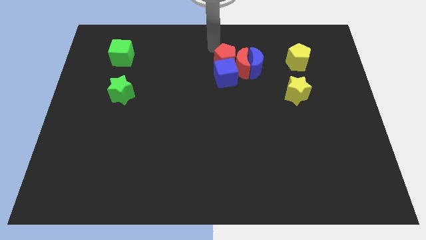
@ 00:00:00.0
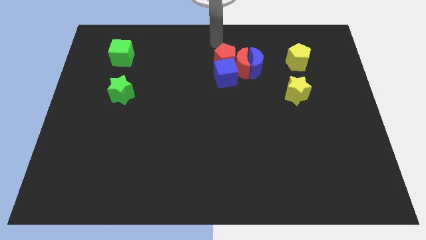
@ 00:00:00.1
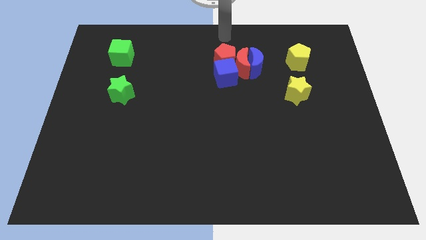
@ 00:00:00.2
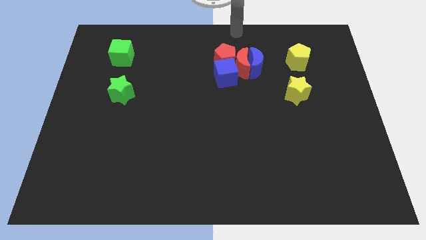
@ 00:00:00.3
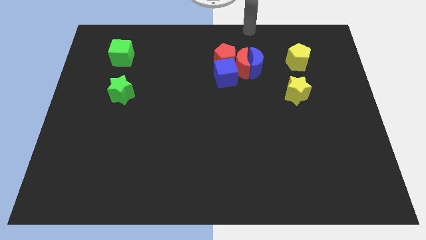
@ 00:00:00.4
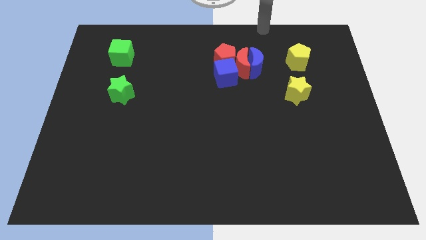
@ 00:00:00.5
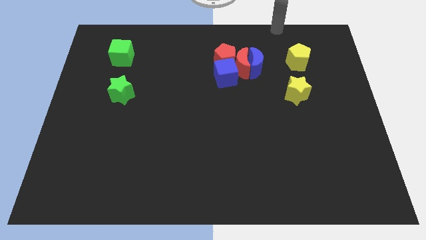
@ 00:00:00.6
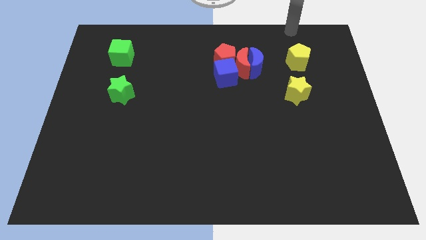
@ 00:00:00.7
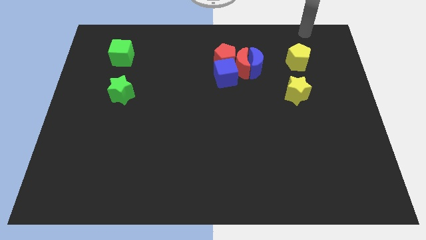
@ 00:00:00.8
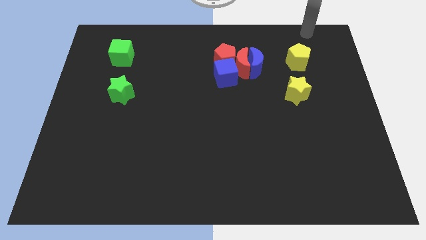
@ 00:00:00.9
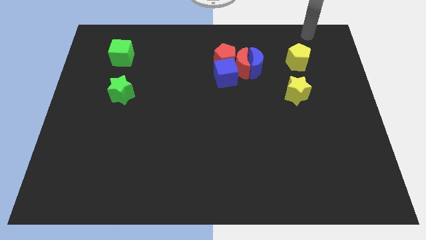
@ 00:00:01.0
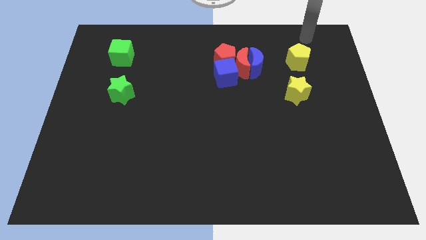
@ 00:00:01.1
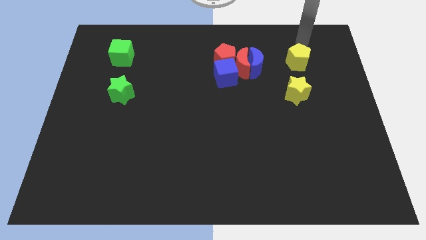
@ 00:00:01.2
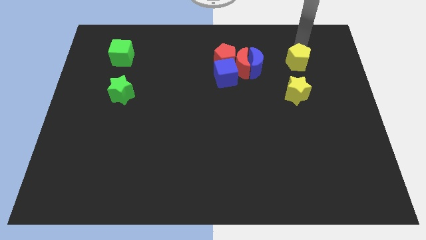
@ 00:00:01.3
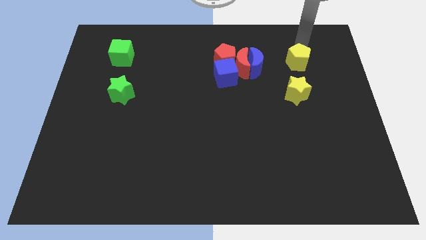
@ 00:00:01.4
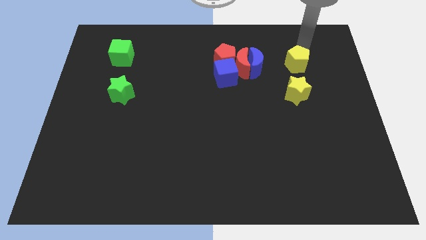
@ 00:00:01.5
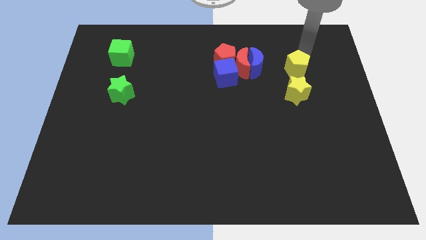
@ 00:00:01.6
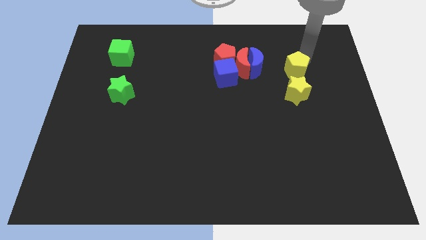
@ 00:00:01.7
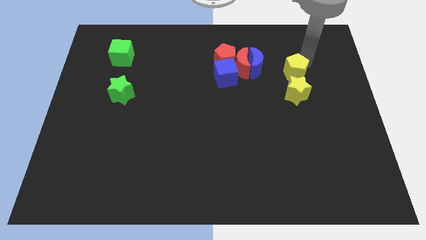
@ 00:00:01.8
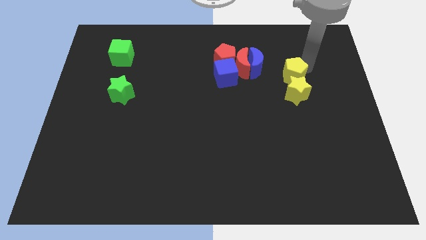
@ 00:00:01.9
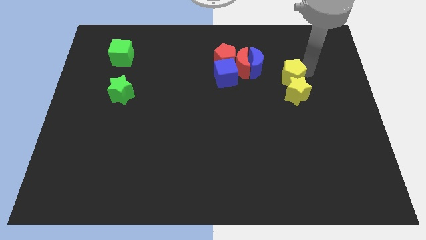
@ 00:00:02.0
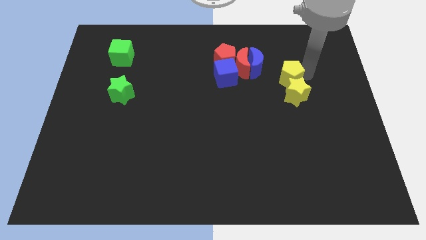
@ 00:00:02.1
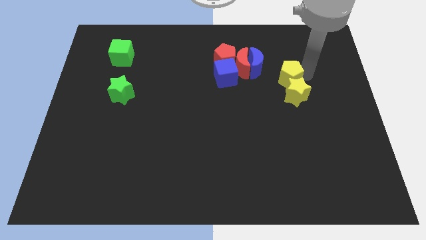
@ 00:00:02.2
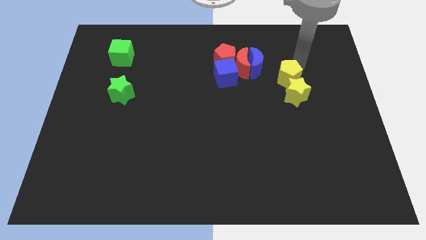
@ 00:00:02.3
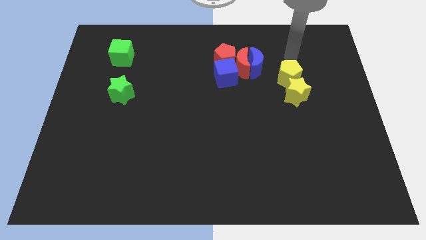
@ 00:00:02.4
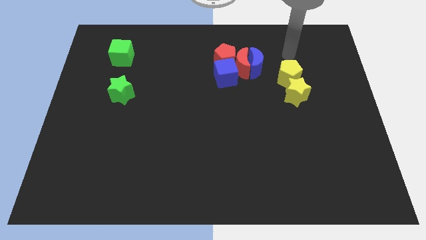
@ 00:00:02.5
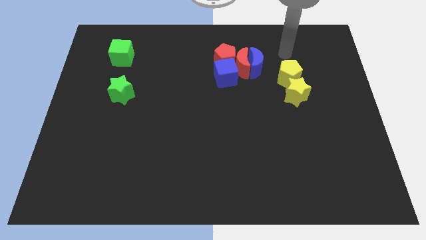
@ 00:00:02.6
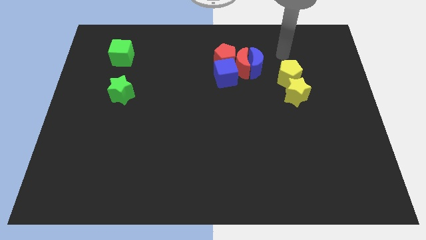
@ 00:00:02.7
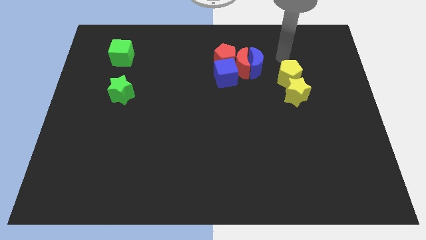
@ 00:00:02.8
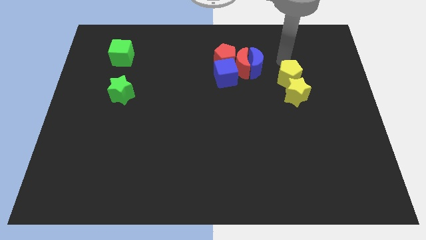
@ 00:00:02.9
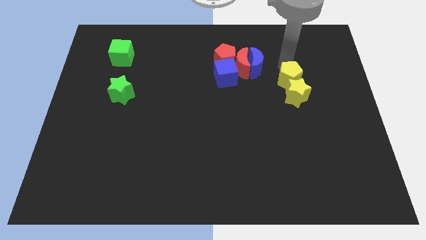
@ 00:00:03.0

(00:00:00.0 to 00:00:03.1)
push yellow pentagon towards yellow star

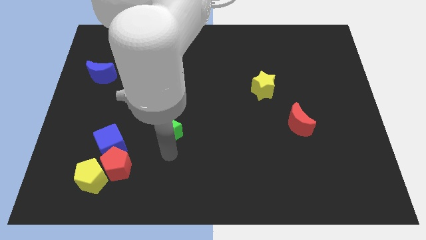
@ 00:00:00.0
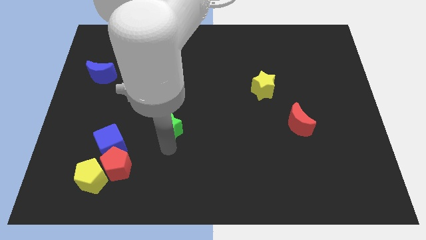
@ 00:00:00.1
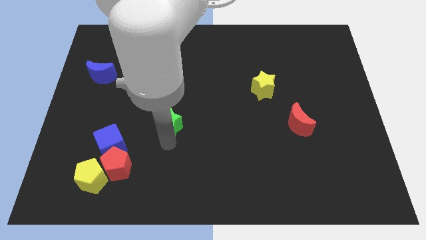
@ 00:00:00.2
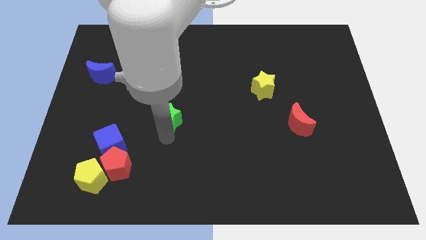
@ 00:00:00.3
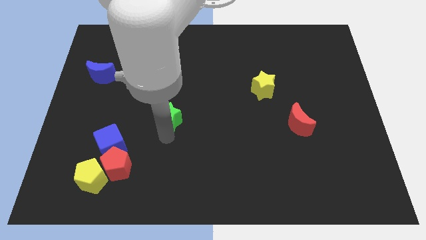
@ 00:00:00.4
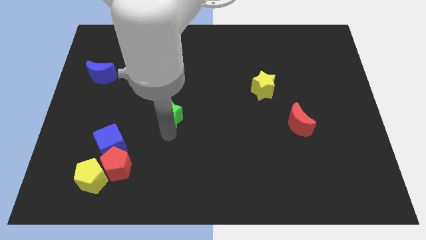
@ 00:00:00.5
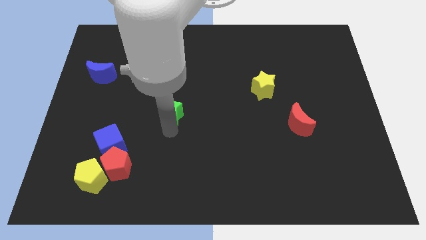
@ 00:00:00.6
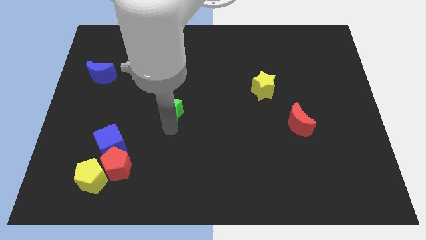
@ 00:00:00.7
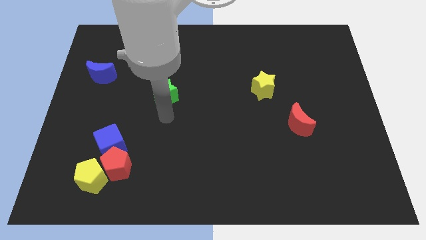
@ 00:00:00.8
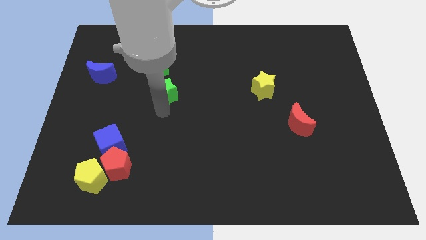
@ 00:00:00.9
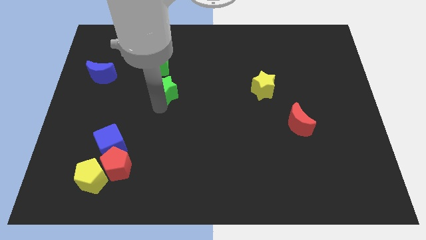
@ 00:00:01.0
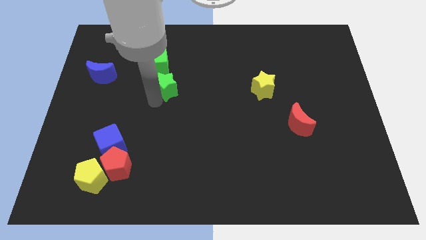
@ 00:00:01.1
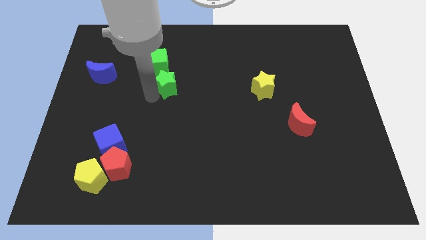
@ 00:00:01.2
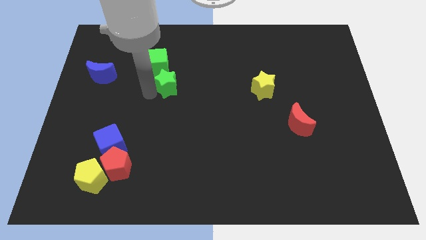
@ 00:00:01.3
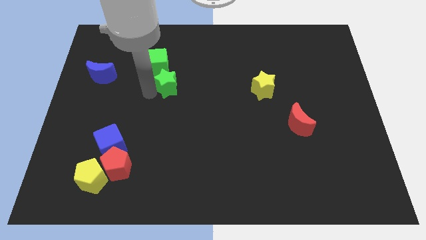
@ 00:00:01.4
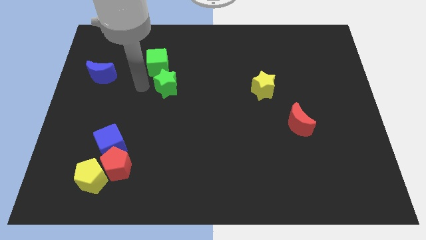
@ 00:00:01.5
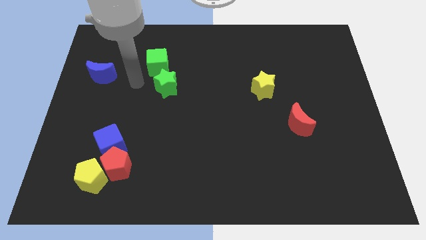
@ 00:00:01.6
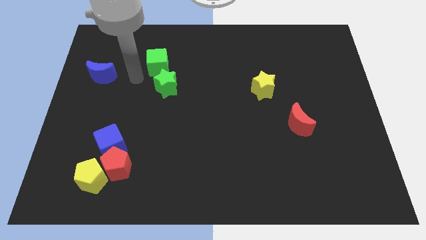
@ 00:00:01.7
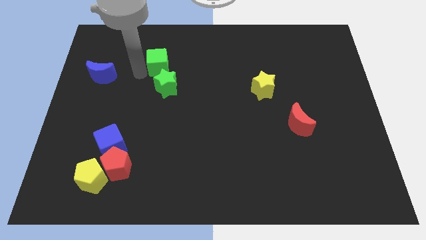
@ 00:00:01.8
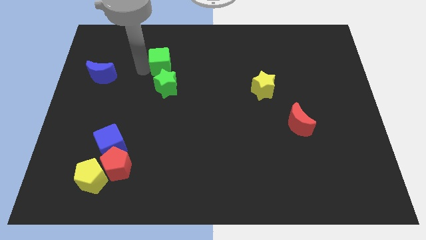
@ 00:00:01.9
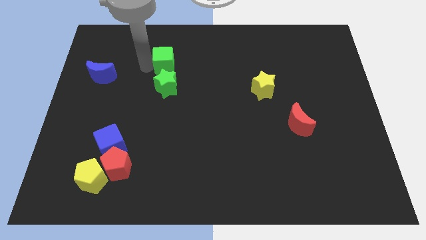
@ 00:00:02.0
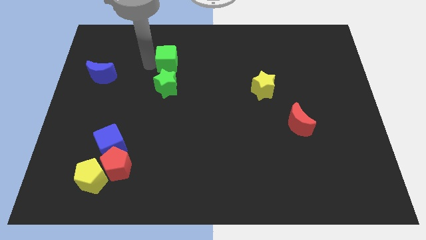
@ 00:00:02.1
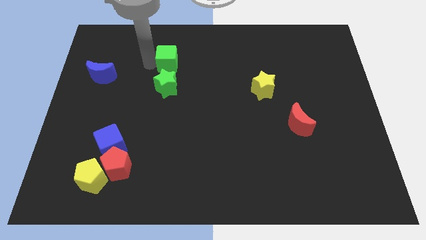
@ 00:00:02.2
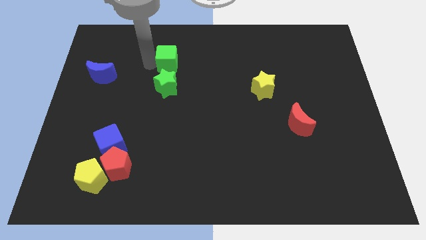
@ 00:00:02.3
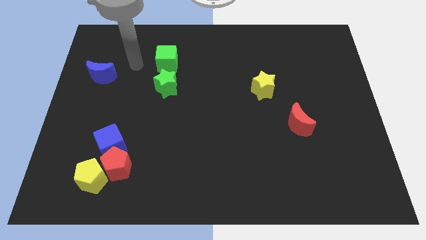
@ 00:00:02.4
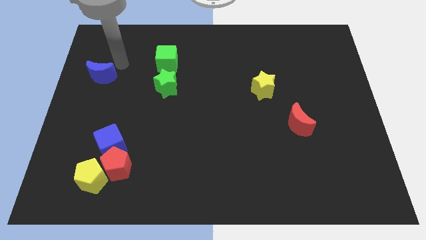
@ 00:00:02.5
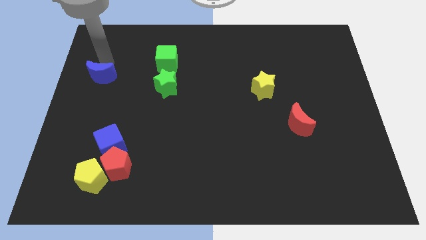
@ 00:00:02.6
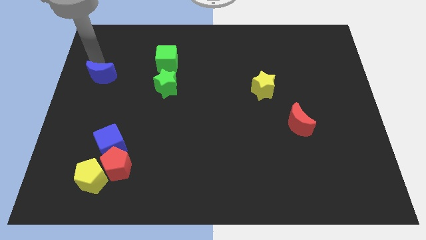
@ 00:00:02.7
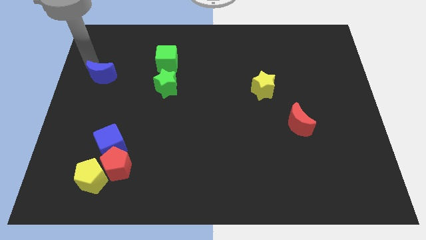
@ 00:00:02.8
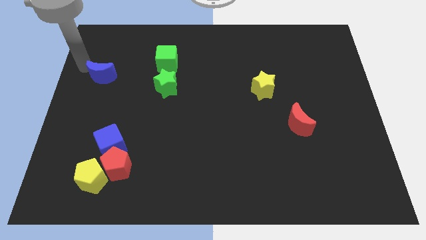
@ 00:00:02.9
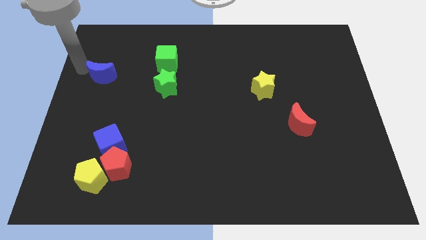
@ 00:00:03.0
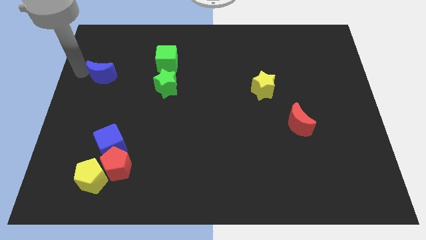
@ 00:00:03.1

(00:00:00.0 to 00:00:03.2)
place the green cube vertically above the green star

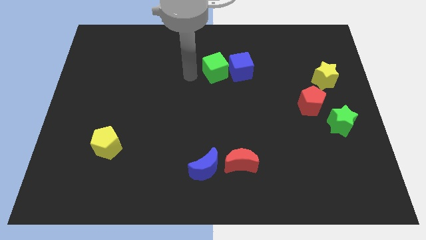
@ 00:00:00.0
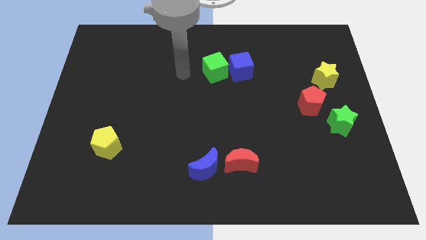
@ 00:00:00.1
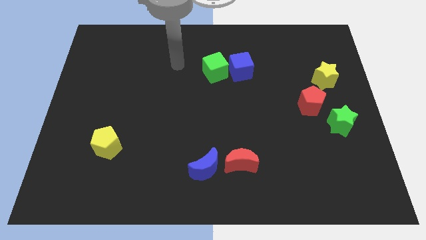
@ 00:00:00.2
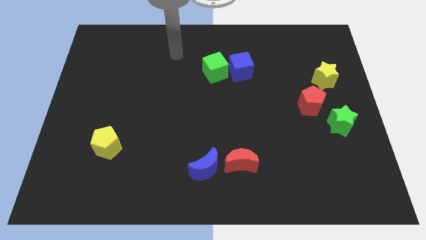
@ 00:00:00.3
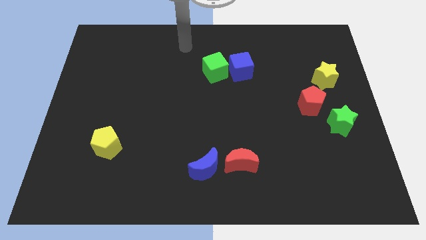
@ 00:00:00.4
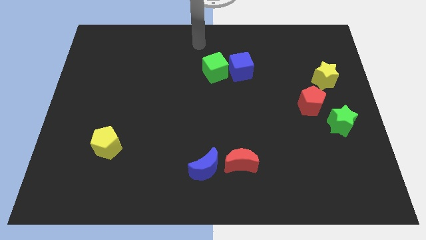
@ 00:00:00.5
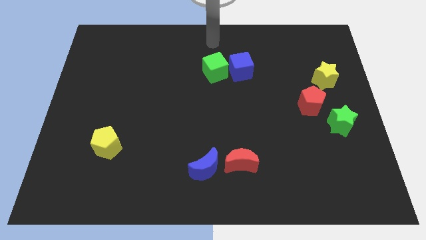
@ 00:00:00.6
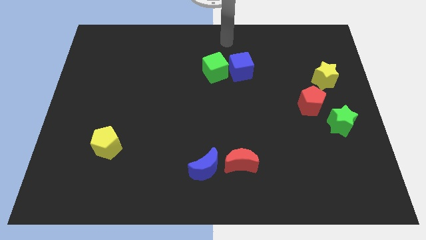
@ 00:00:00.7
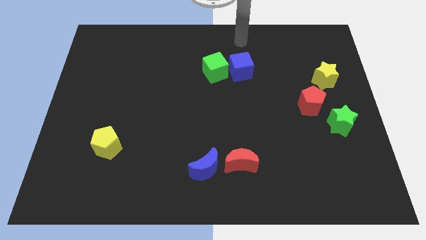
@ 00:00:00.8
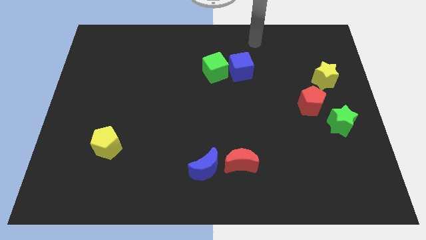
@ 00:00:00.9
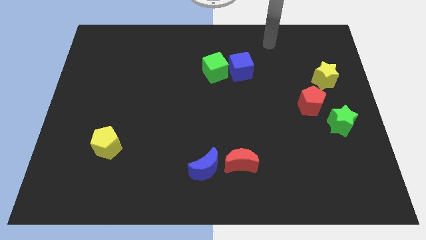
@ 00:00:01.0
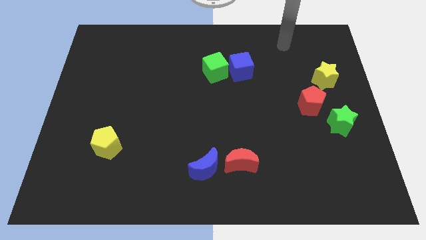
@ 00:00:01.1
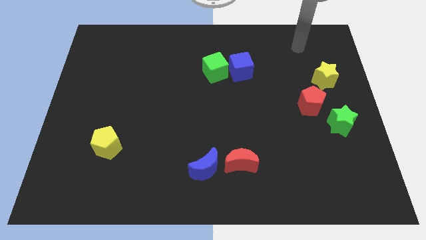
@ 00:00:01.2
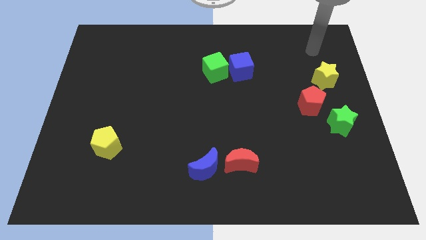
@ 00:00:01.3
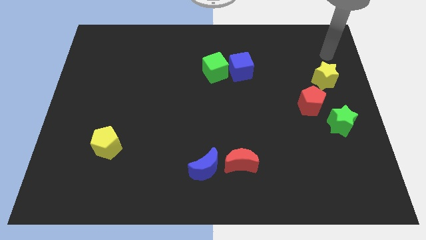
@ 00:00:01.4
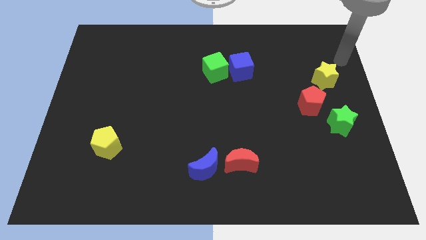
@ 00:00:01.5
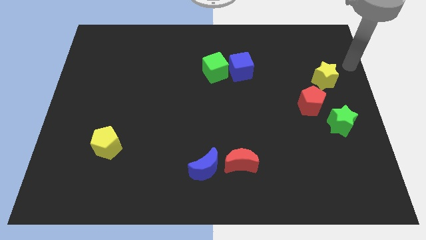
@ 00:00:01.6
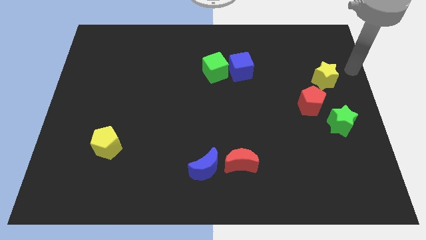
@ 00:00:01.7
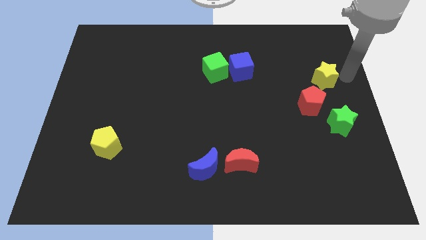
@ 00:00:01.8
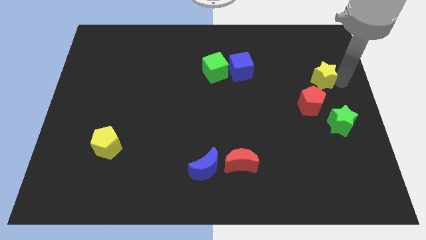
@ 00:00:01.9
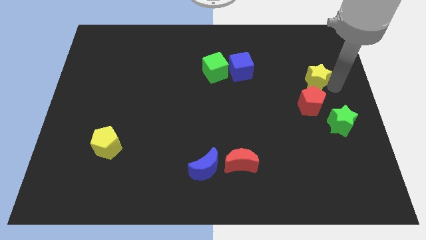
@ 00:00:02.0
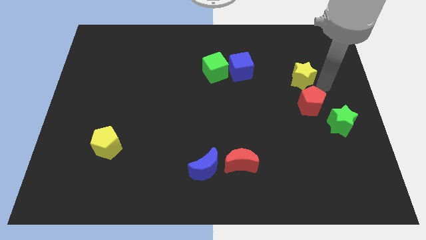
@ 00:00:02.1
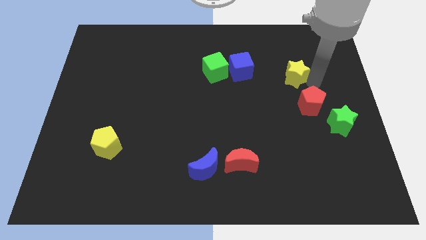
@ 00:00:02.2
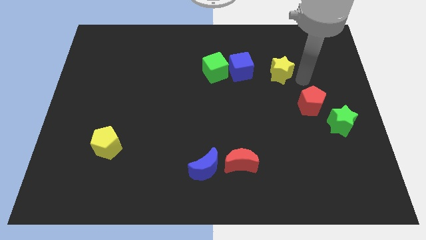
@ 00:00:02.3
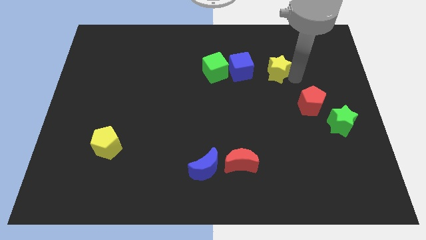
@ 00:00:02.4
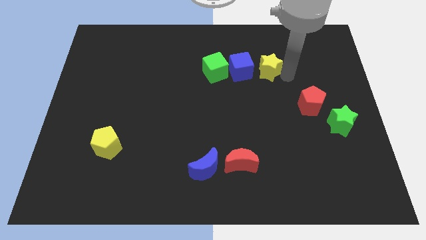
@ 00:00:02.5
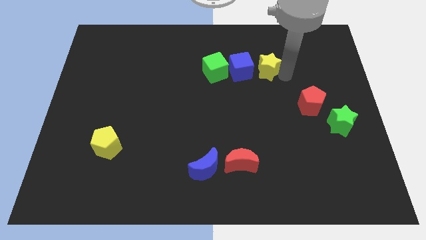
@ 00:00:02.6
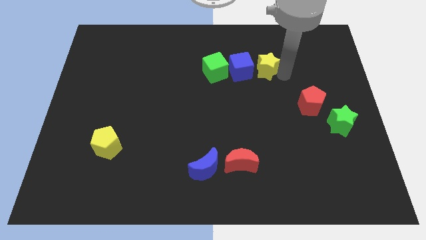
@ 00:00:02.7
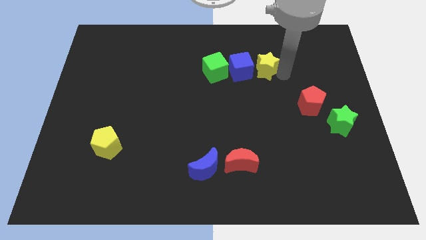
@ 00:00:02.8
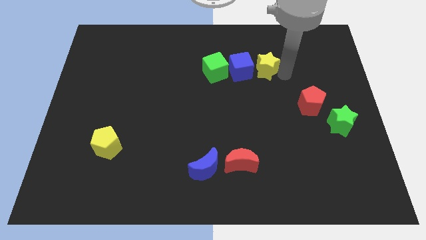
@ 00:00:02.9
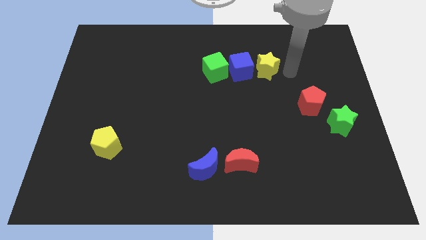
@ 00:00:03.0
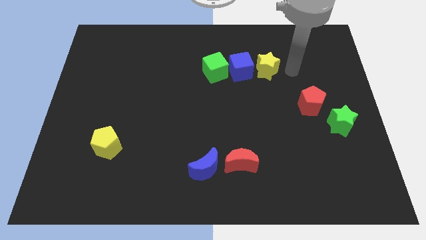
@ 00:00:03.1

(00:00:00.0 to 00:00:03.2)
push the yellow star to the right side of blue cube
